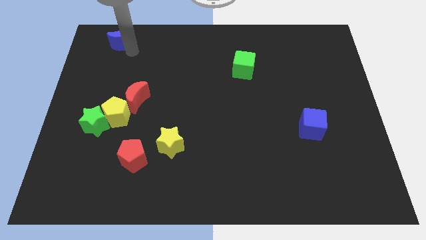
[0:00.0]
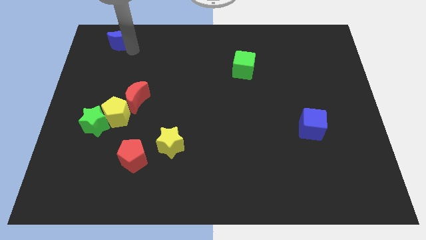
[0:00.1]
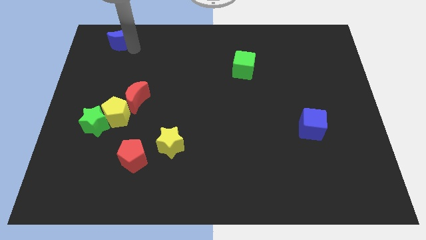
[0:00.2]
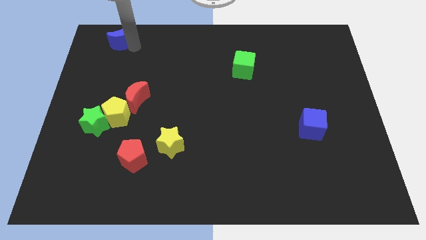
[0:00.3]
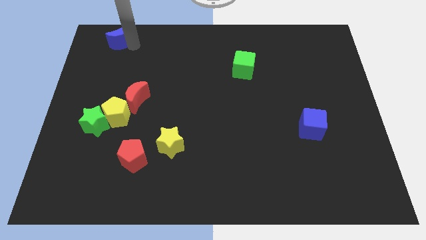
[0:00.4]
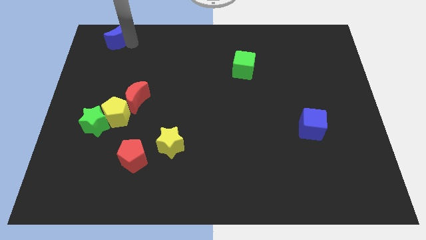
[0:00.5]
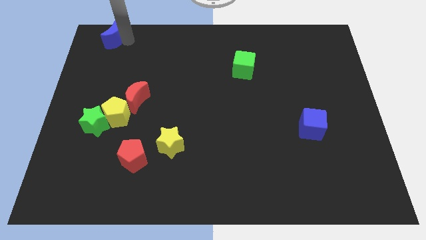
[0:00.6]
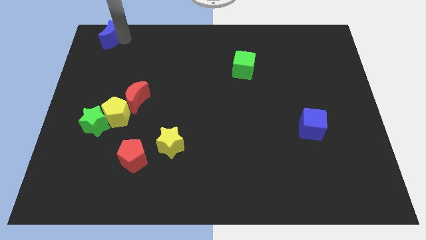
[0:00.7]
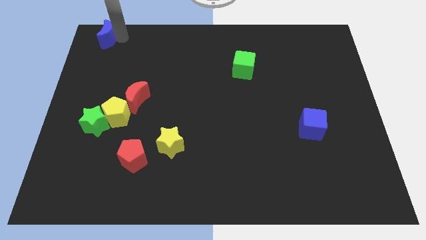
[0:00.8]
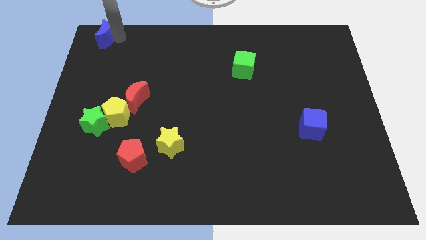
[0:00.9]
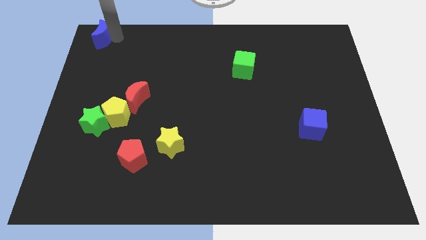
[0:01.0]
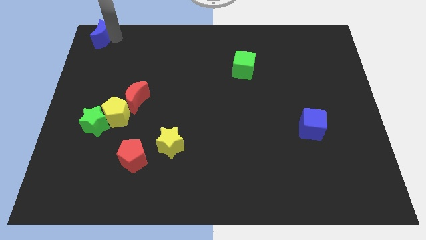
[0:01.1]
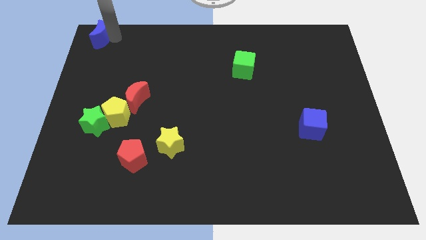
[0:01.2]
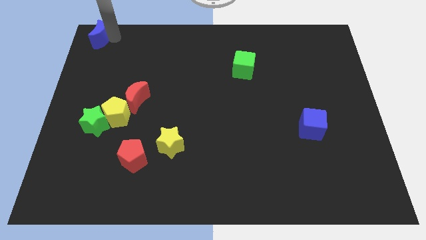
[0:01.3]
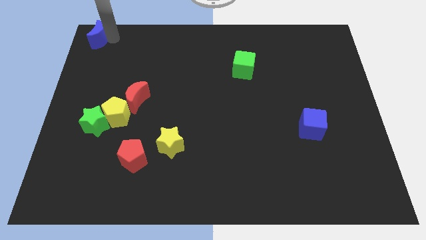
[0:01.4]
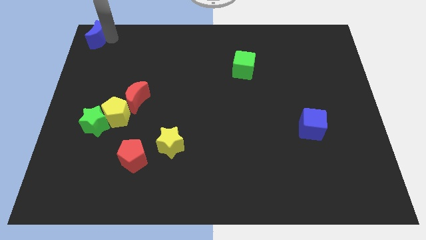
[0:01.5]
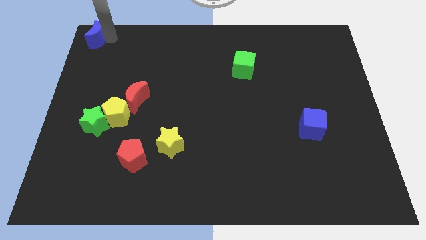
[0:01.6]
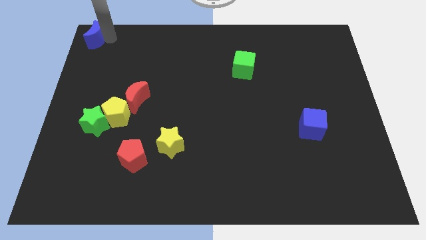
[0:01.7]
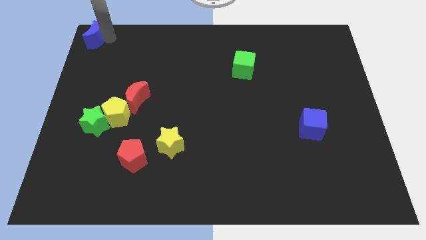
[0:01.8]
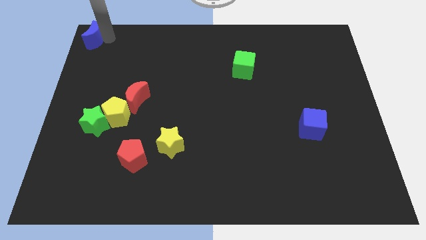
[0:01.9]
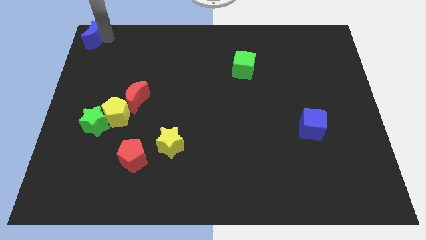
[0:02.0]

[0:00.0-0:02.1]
push the blue crescent towards the top left of the board

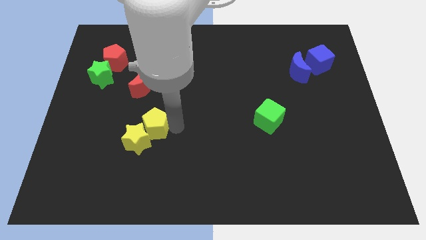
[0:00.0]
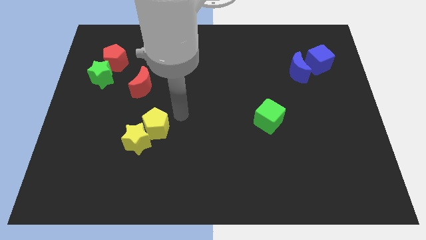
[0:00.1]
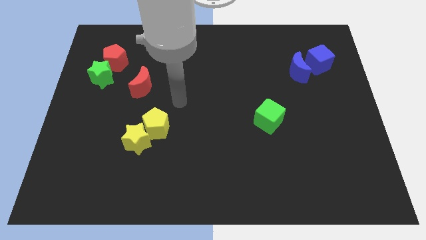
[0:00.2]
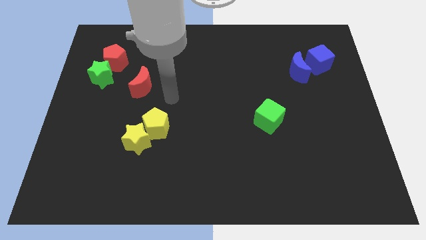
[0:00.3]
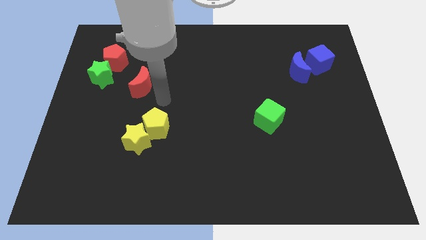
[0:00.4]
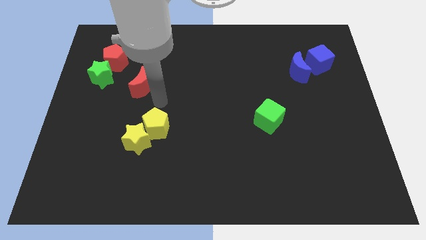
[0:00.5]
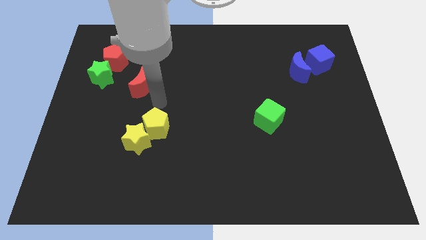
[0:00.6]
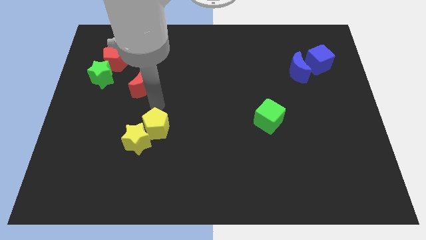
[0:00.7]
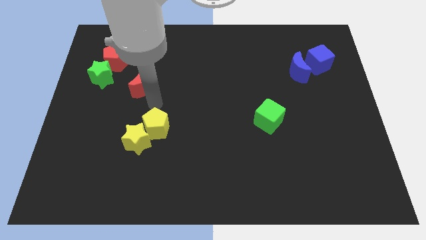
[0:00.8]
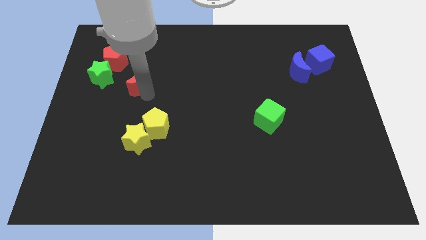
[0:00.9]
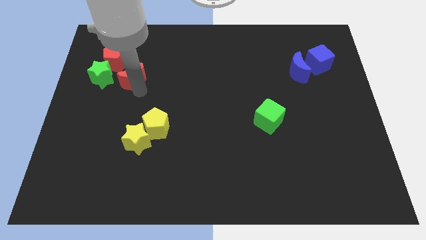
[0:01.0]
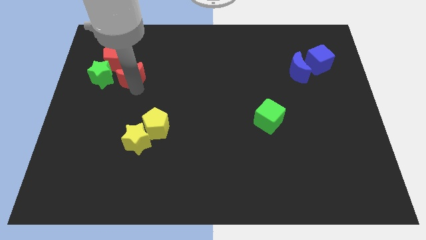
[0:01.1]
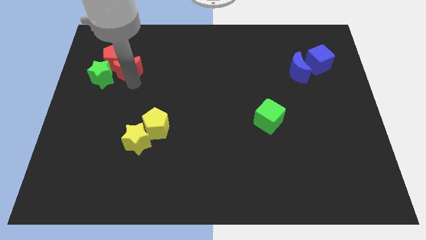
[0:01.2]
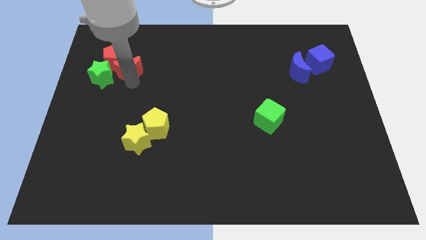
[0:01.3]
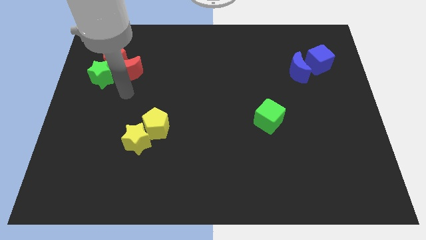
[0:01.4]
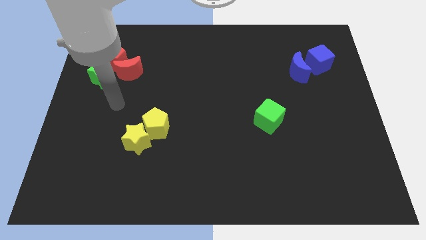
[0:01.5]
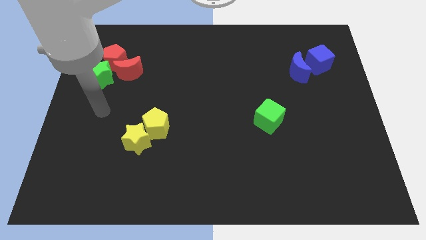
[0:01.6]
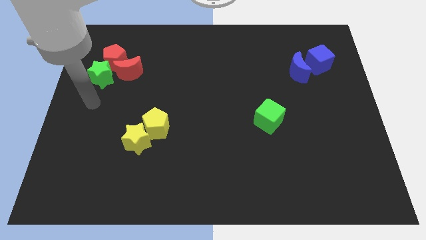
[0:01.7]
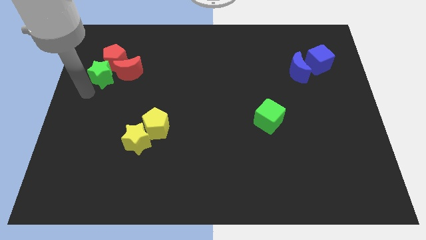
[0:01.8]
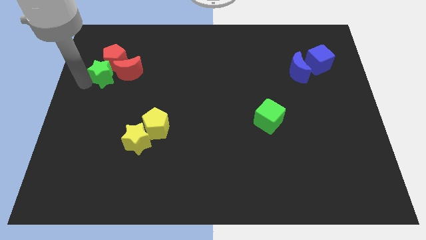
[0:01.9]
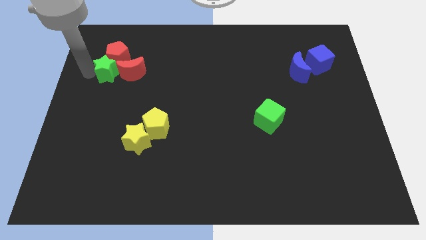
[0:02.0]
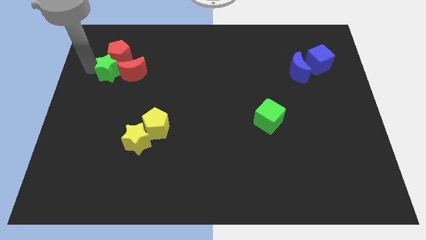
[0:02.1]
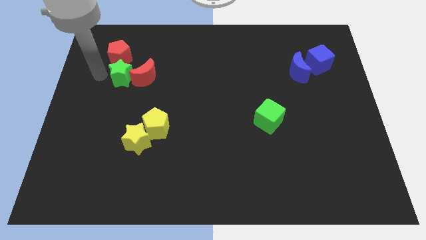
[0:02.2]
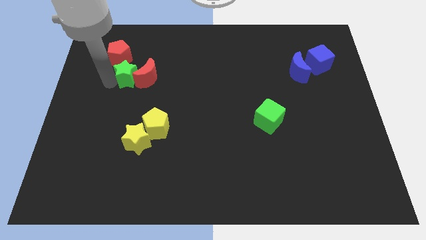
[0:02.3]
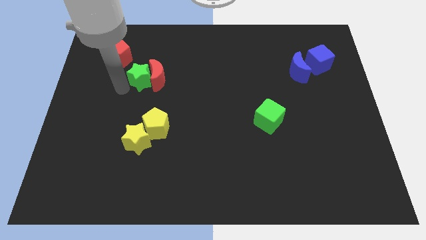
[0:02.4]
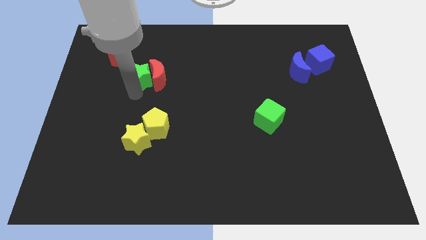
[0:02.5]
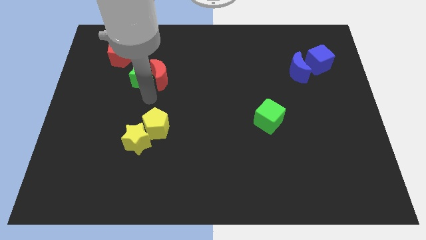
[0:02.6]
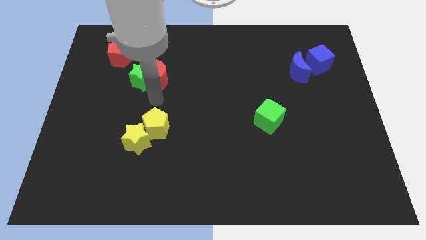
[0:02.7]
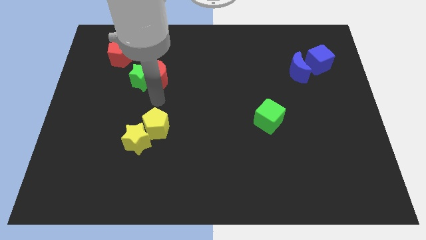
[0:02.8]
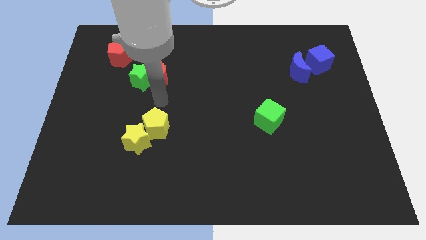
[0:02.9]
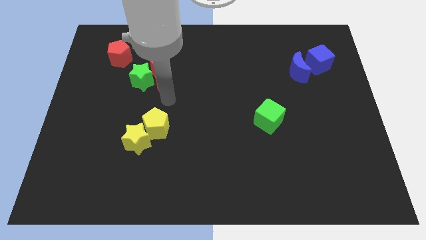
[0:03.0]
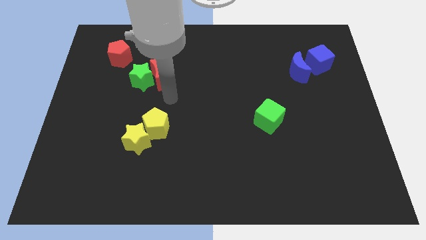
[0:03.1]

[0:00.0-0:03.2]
push the red moon into the red pentagon

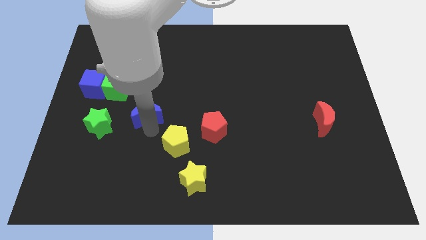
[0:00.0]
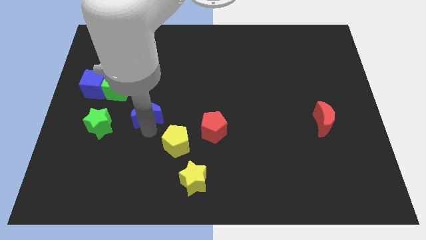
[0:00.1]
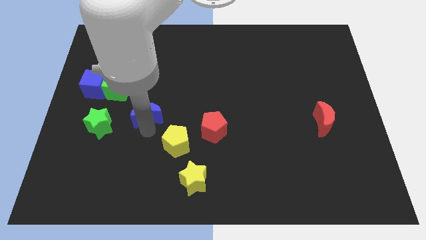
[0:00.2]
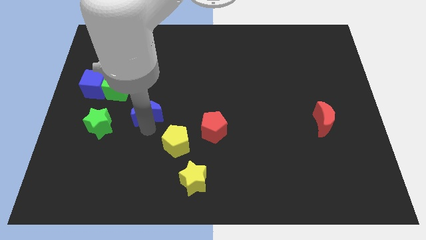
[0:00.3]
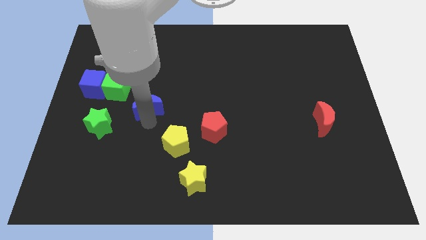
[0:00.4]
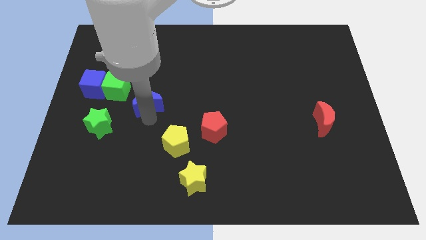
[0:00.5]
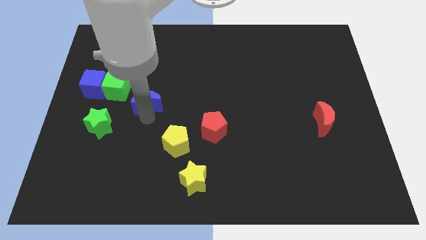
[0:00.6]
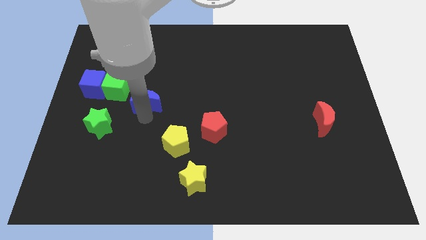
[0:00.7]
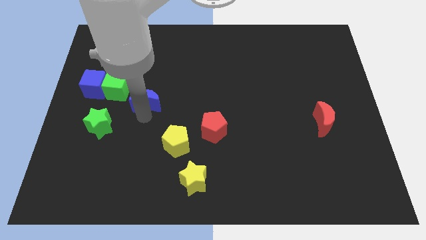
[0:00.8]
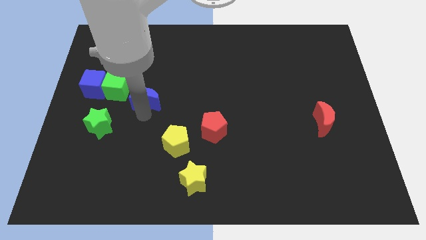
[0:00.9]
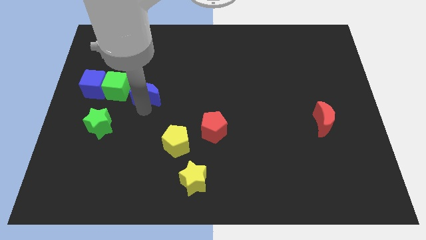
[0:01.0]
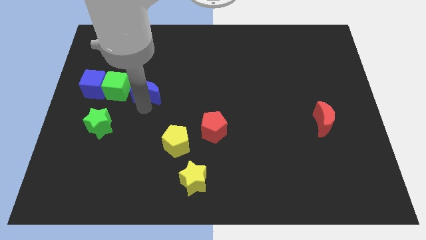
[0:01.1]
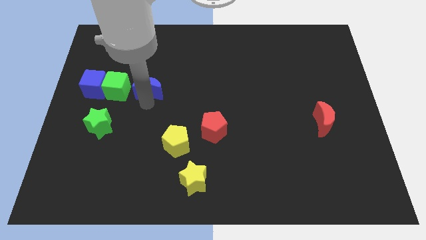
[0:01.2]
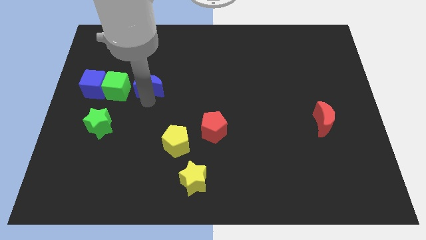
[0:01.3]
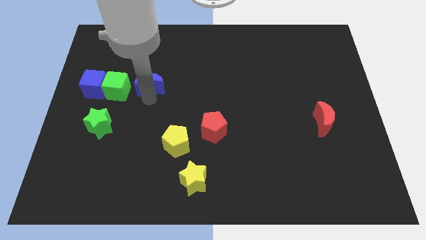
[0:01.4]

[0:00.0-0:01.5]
push the blue crescent to the right of the green cube

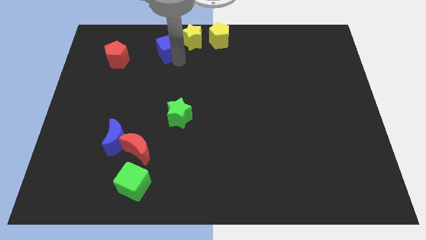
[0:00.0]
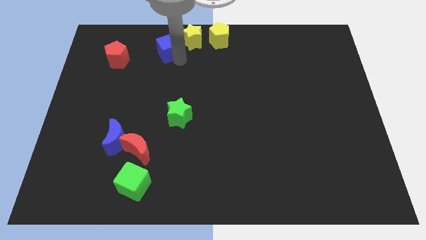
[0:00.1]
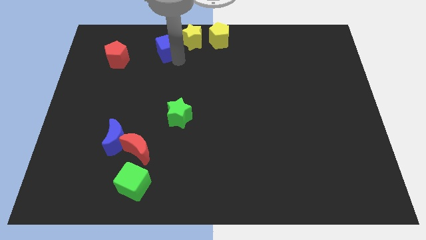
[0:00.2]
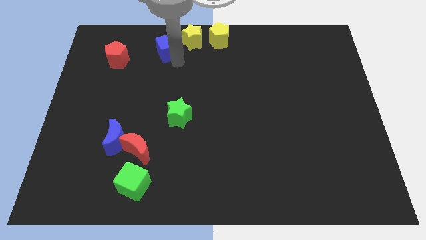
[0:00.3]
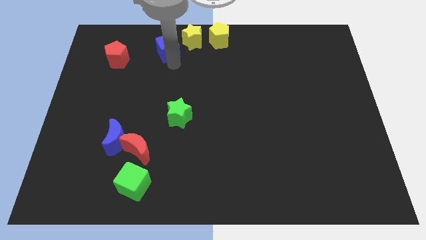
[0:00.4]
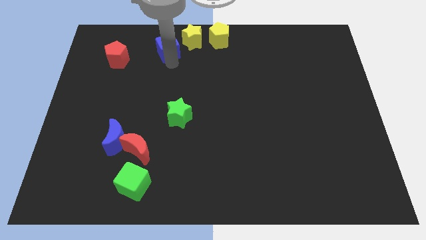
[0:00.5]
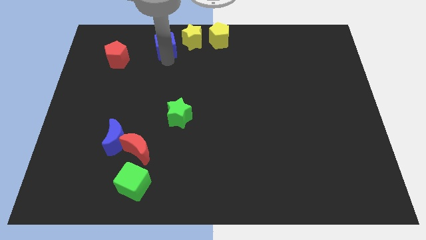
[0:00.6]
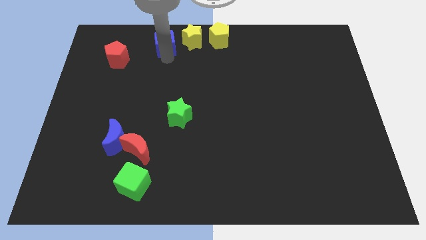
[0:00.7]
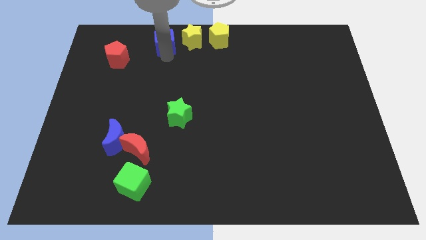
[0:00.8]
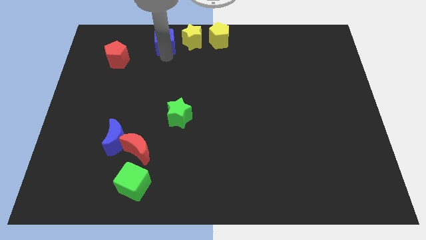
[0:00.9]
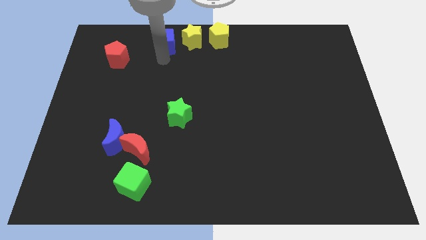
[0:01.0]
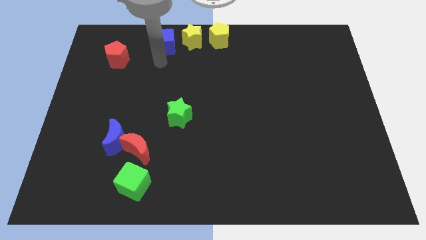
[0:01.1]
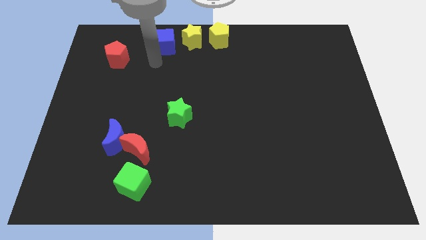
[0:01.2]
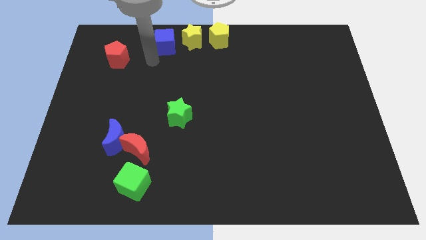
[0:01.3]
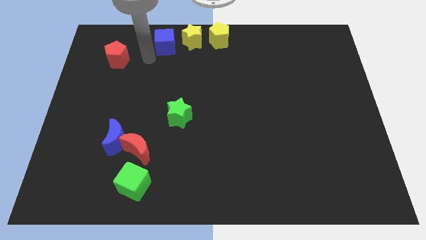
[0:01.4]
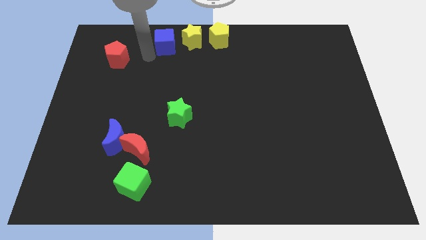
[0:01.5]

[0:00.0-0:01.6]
move the blue cube towards the top

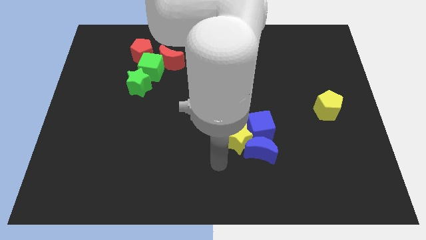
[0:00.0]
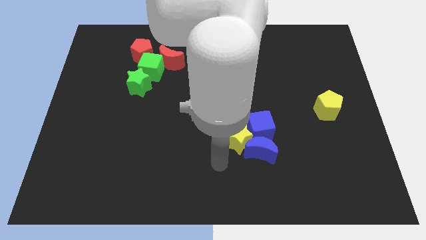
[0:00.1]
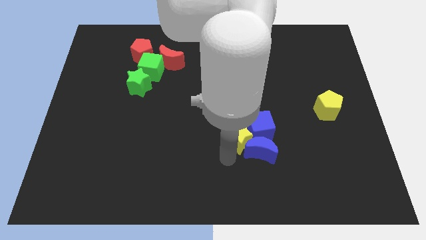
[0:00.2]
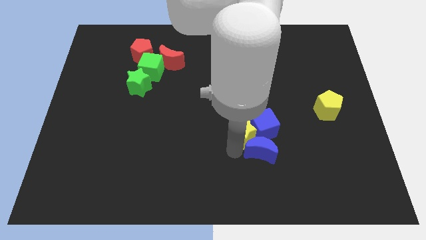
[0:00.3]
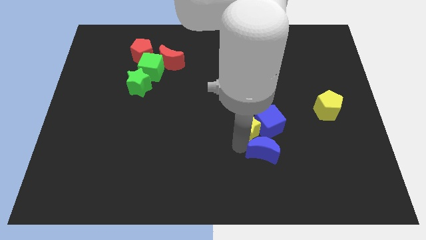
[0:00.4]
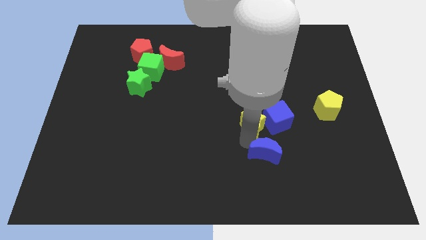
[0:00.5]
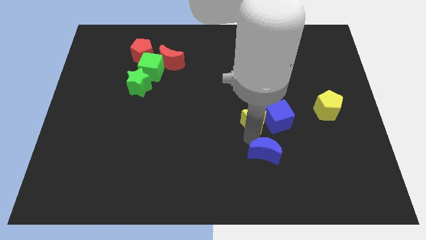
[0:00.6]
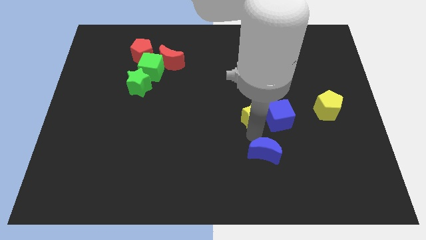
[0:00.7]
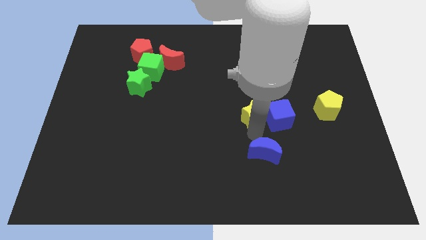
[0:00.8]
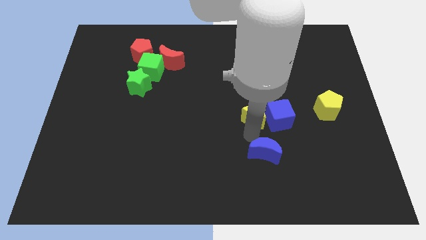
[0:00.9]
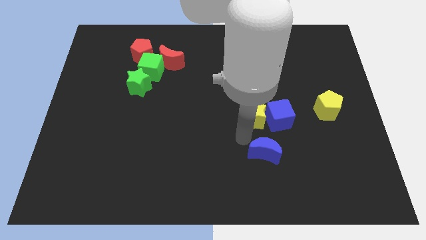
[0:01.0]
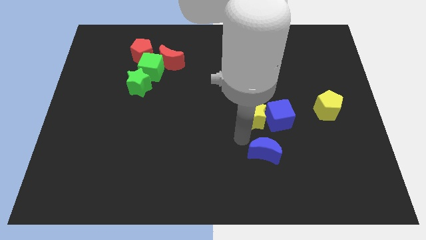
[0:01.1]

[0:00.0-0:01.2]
push the yellow star into the blue cube
